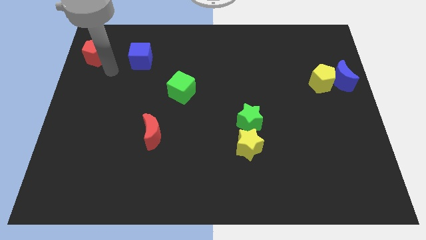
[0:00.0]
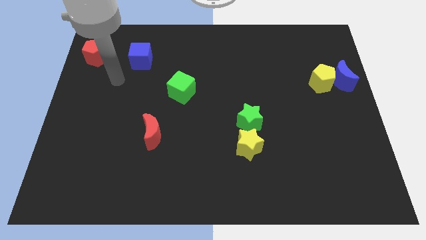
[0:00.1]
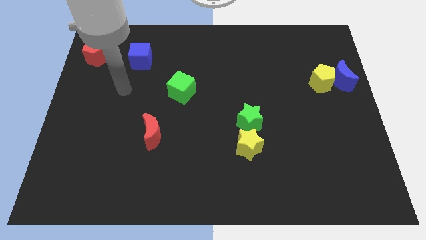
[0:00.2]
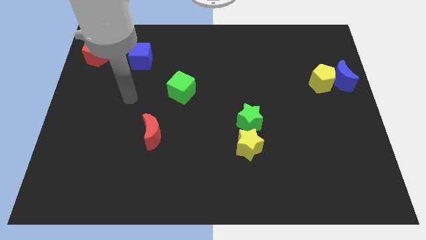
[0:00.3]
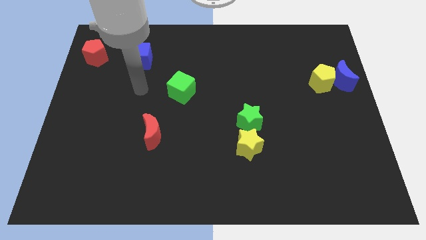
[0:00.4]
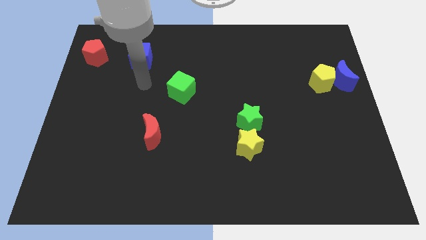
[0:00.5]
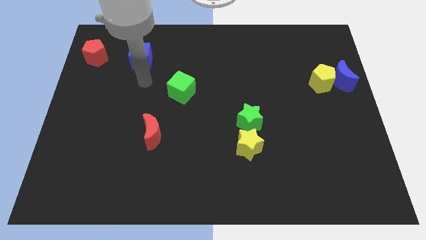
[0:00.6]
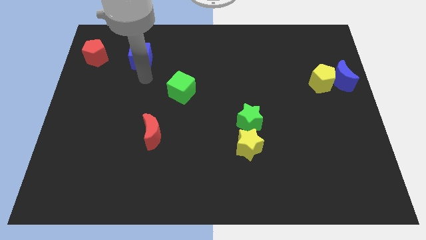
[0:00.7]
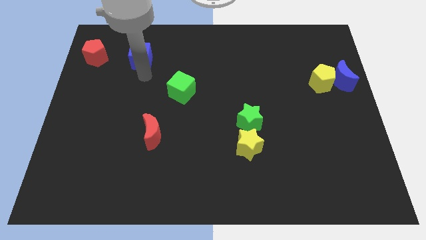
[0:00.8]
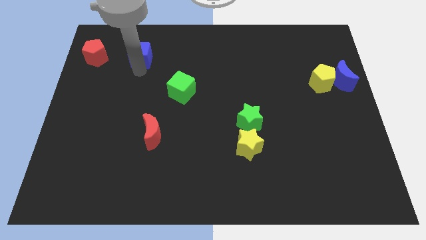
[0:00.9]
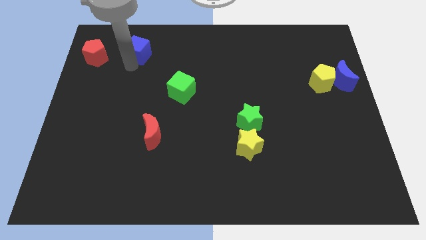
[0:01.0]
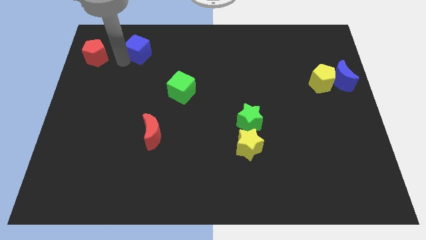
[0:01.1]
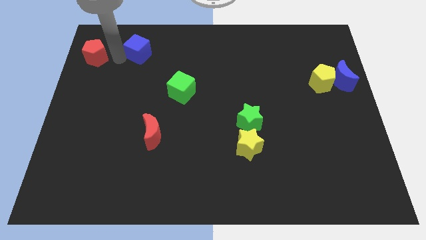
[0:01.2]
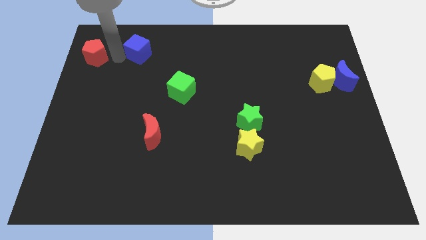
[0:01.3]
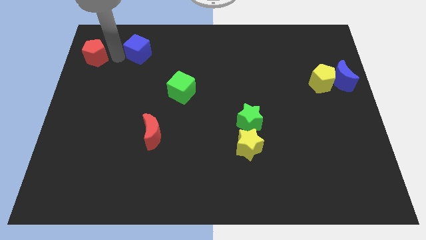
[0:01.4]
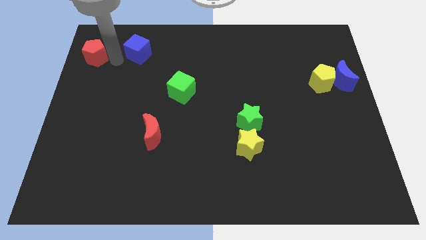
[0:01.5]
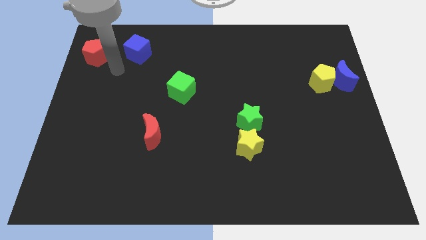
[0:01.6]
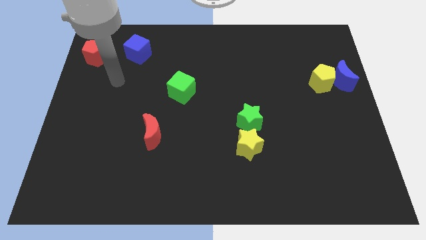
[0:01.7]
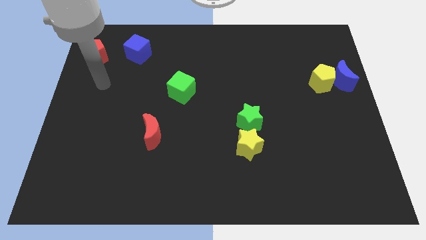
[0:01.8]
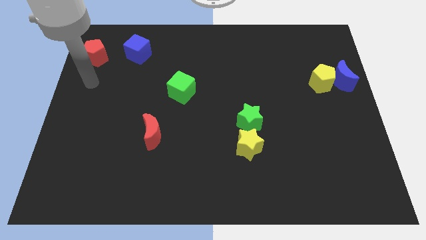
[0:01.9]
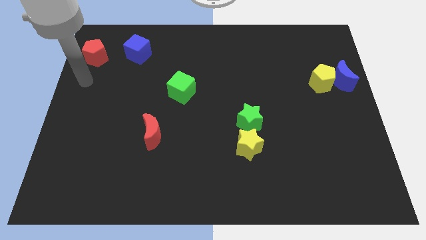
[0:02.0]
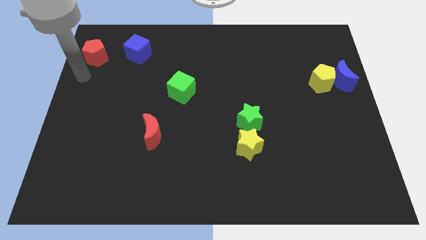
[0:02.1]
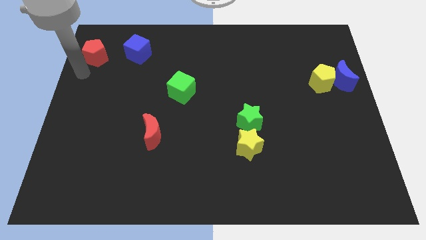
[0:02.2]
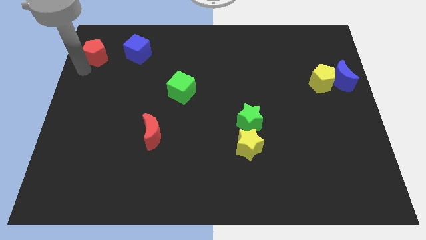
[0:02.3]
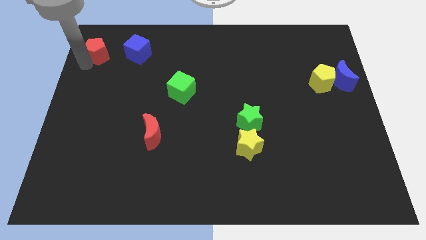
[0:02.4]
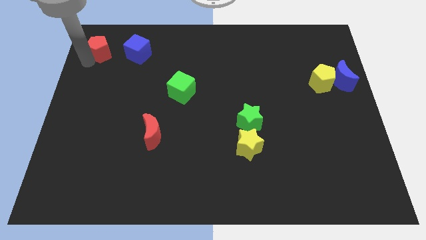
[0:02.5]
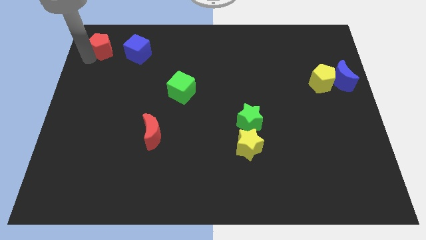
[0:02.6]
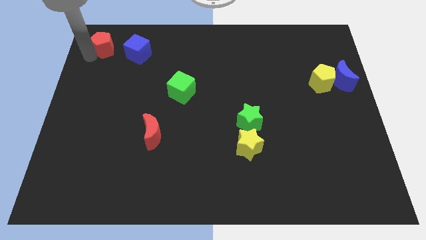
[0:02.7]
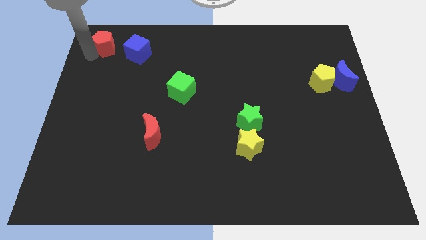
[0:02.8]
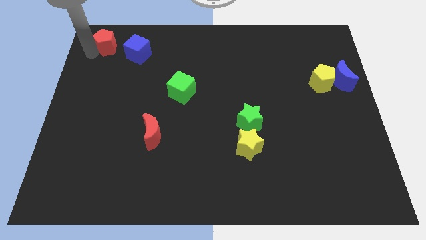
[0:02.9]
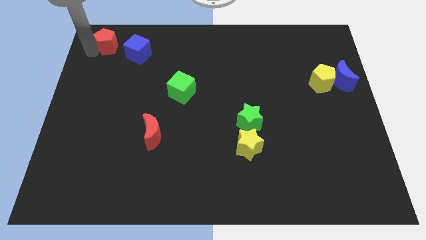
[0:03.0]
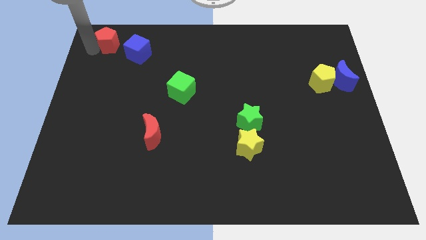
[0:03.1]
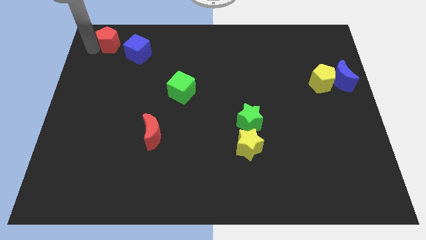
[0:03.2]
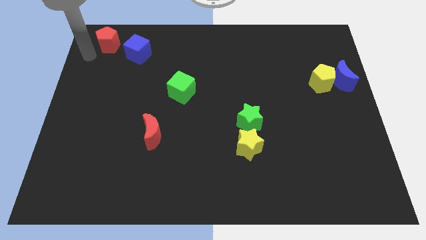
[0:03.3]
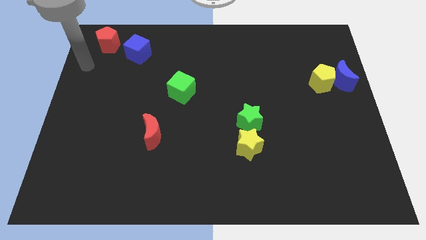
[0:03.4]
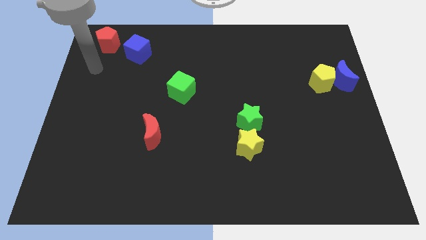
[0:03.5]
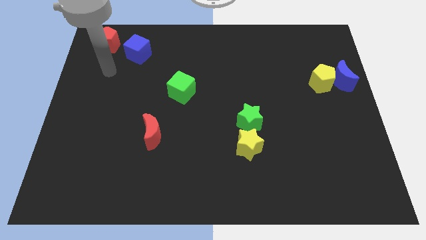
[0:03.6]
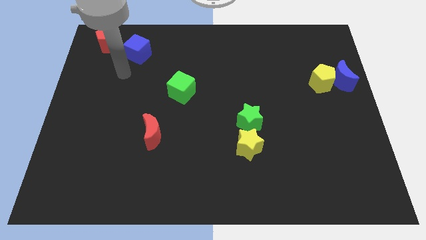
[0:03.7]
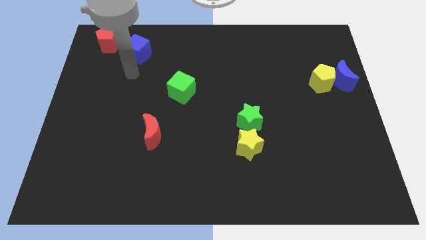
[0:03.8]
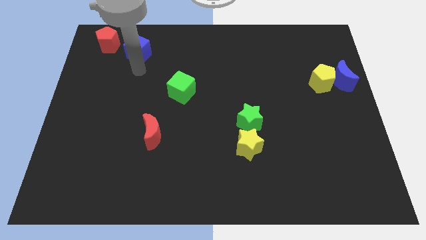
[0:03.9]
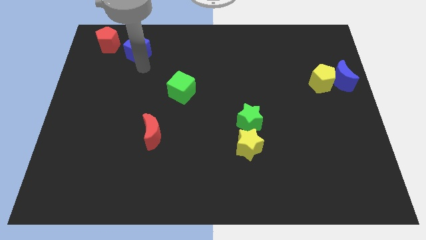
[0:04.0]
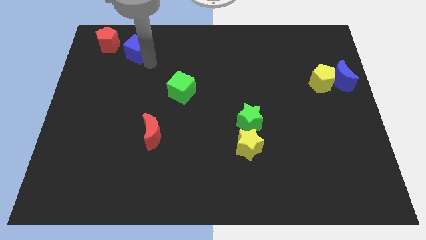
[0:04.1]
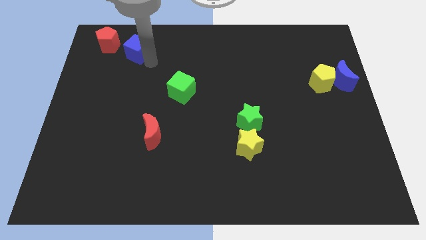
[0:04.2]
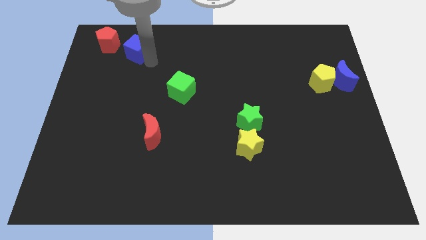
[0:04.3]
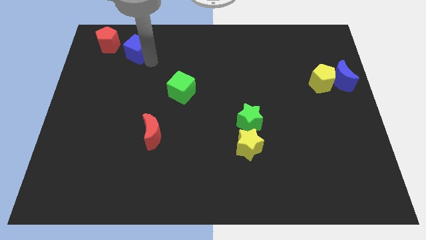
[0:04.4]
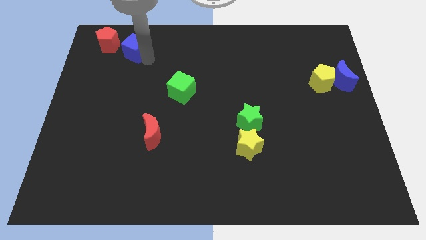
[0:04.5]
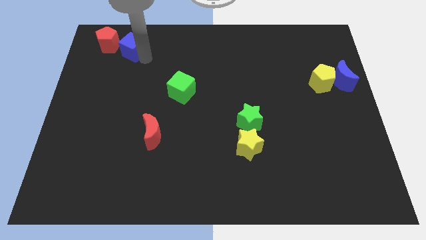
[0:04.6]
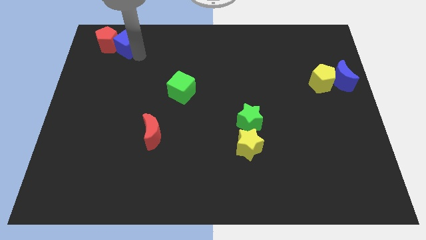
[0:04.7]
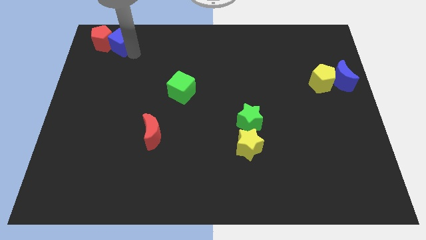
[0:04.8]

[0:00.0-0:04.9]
move the blue cube and the red pentagon to the top of the board

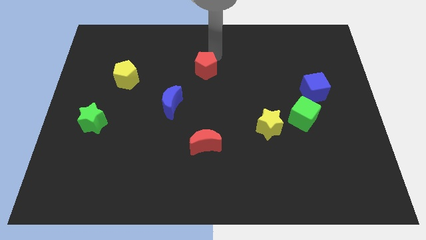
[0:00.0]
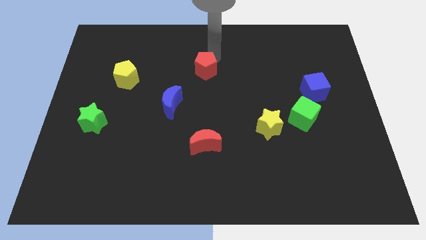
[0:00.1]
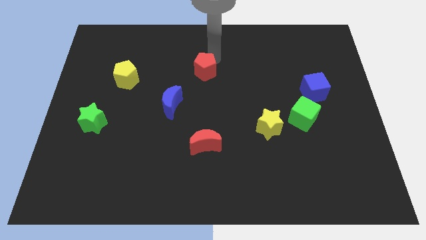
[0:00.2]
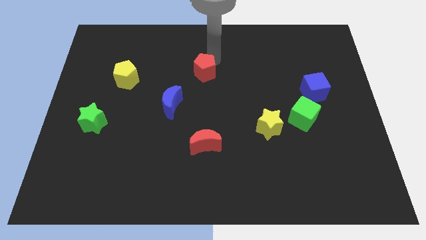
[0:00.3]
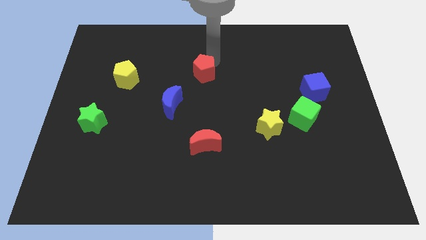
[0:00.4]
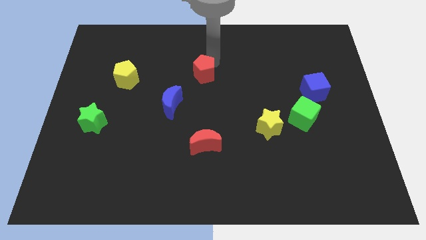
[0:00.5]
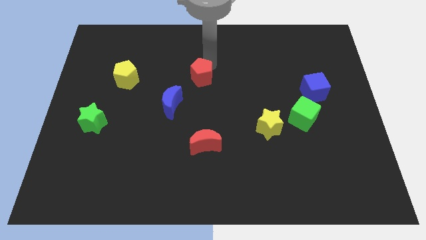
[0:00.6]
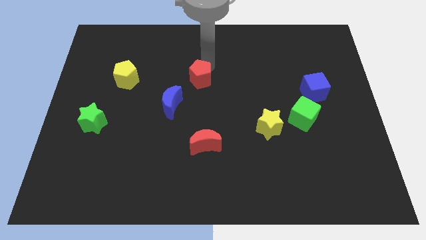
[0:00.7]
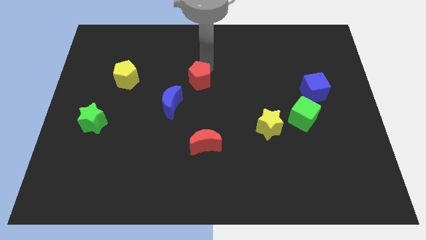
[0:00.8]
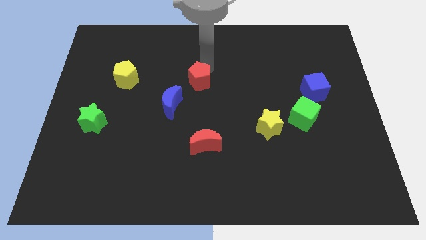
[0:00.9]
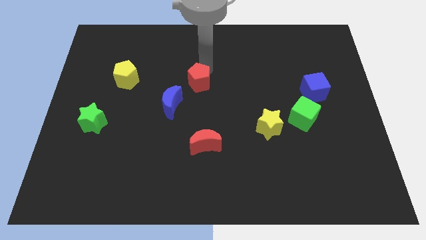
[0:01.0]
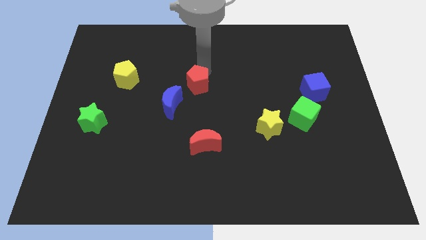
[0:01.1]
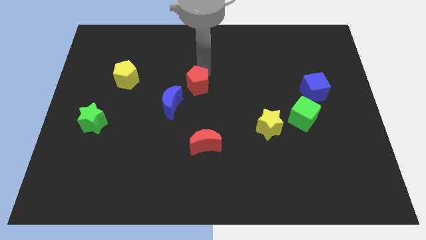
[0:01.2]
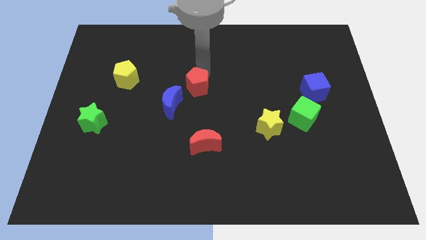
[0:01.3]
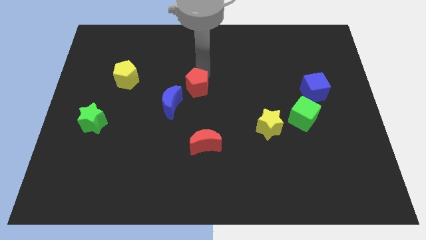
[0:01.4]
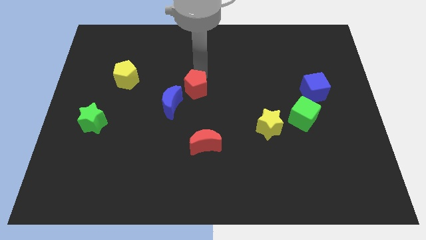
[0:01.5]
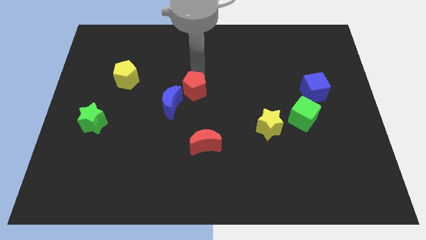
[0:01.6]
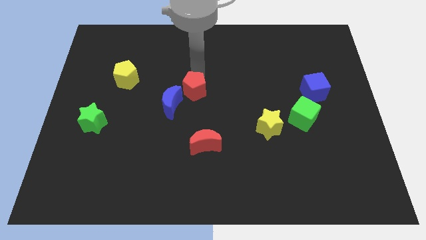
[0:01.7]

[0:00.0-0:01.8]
place the red pentagon close to the blue crescent

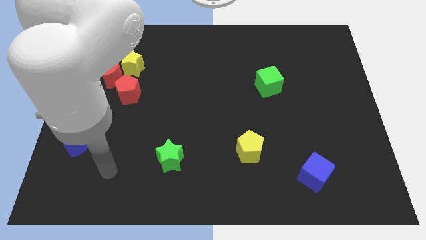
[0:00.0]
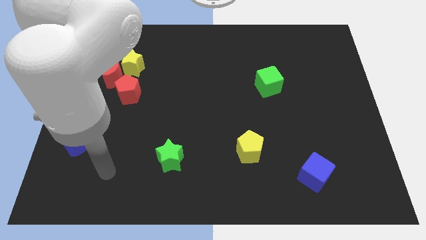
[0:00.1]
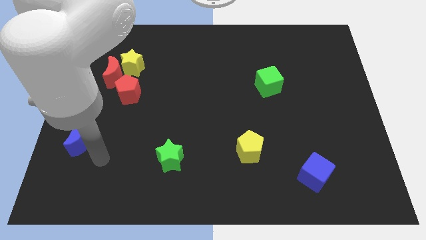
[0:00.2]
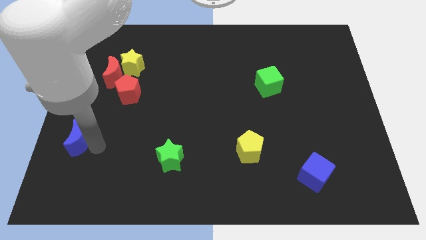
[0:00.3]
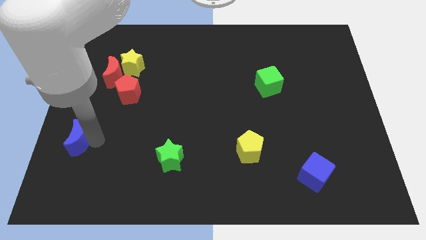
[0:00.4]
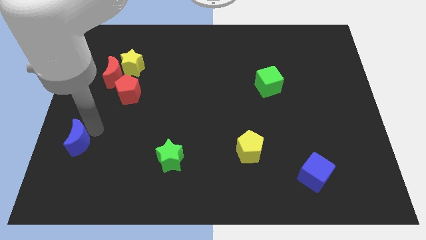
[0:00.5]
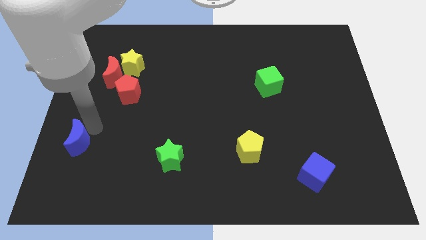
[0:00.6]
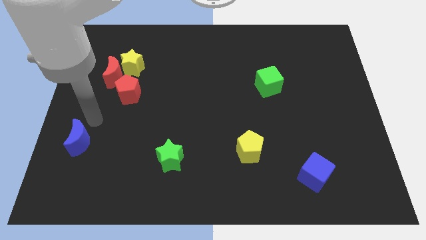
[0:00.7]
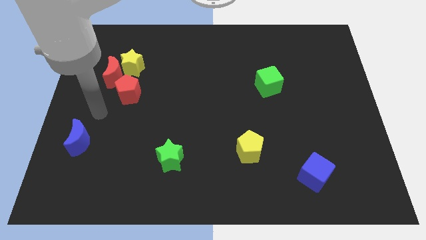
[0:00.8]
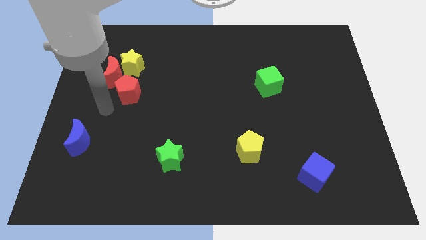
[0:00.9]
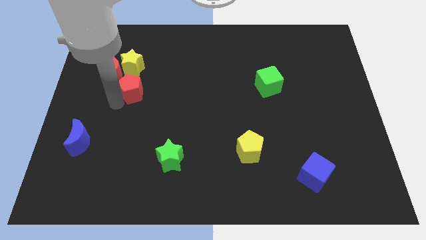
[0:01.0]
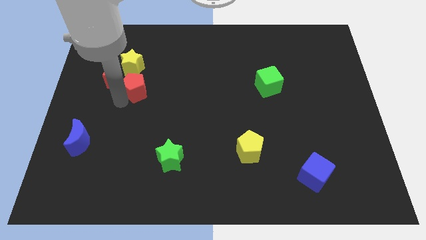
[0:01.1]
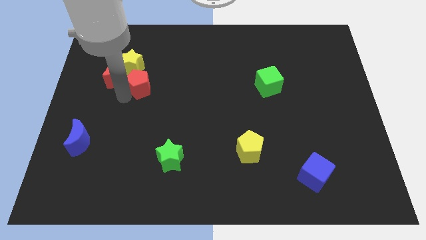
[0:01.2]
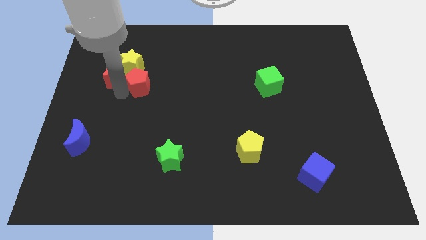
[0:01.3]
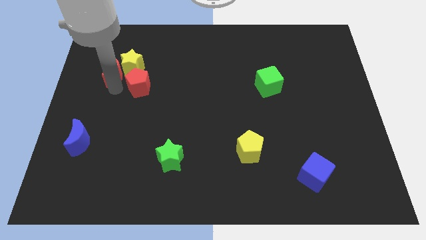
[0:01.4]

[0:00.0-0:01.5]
move red pentagon into yellow star

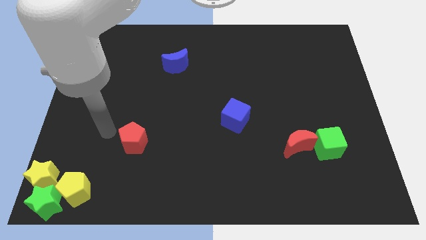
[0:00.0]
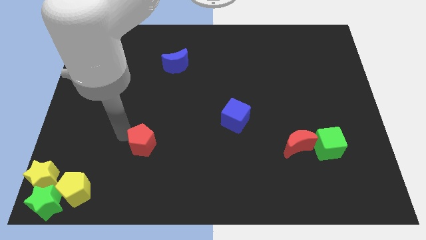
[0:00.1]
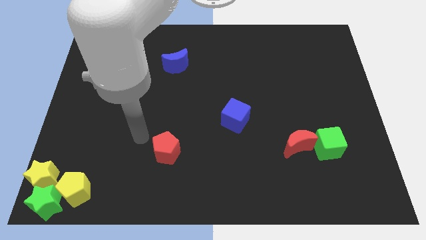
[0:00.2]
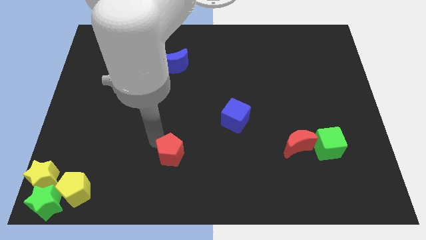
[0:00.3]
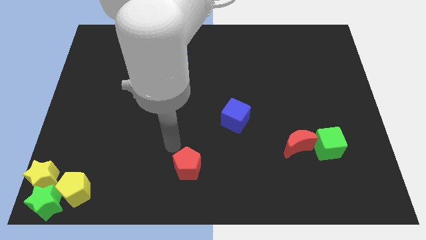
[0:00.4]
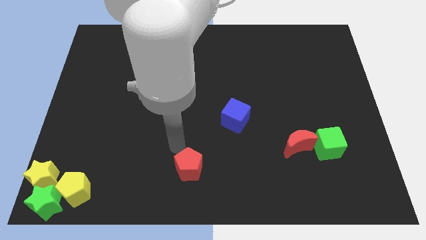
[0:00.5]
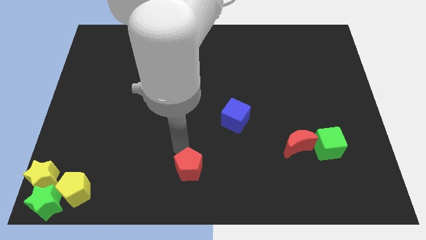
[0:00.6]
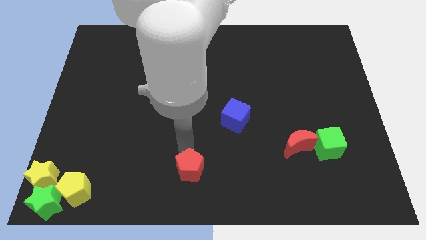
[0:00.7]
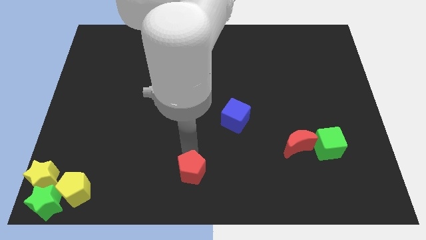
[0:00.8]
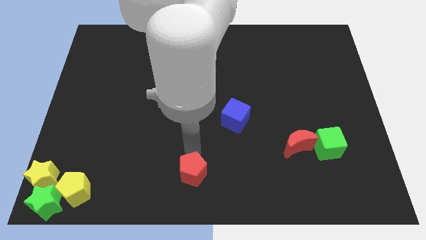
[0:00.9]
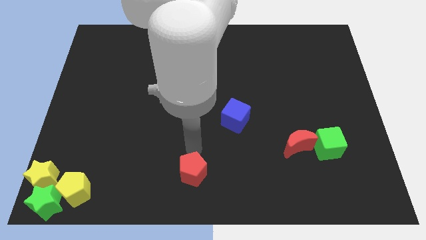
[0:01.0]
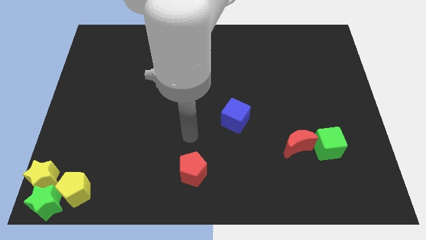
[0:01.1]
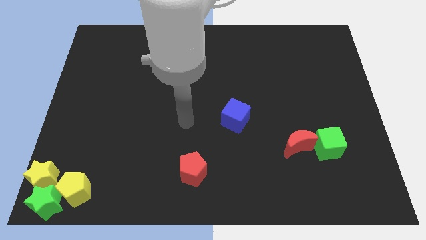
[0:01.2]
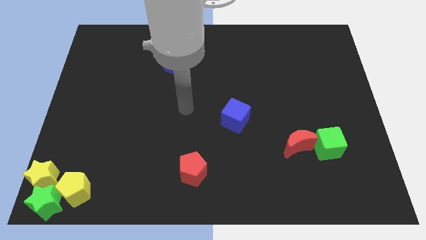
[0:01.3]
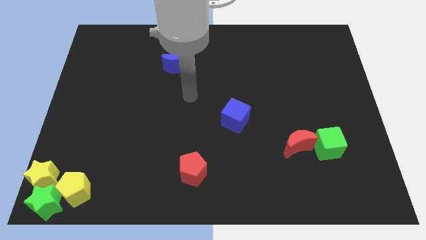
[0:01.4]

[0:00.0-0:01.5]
drag red pentagon towards diagonal to the blue cube
